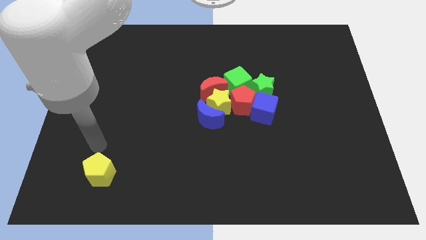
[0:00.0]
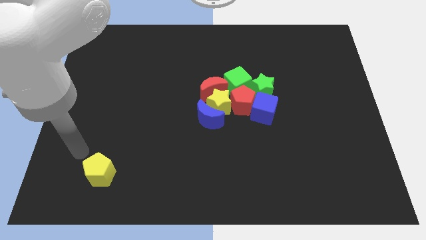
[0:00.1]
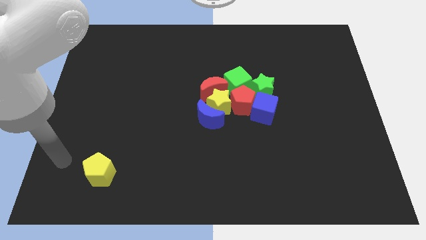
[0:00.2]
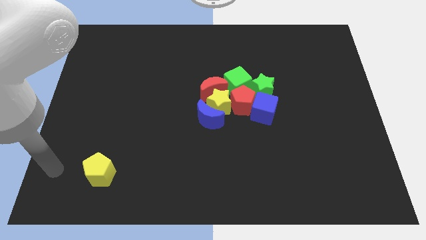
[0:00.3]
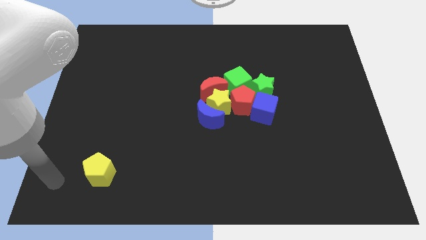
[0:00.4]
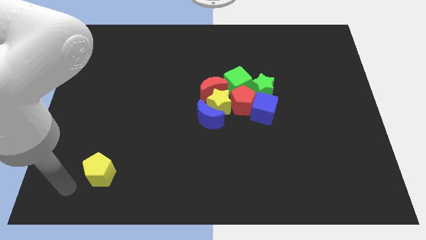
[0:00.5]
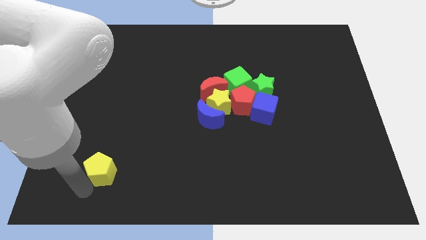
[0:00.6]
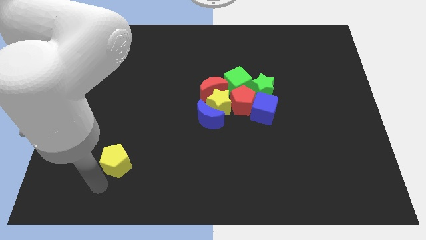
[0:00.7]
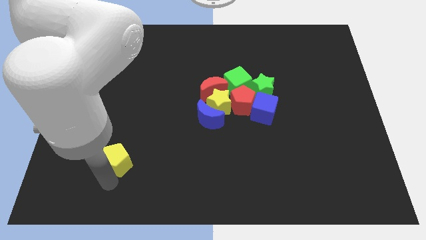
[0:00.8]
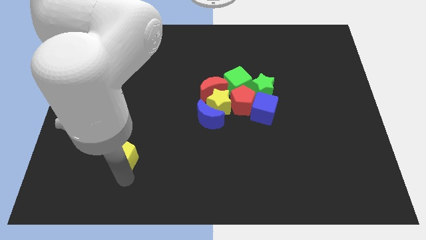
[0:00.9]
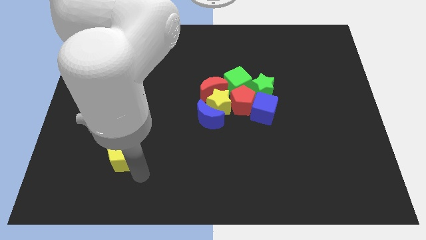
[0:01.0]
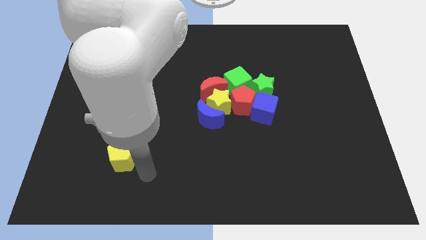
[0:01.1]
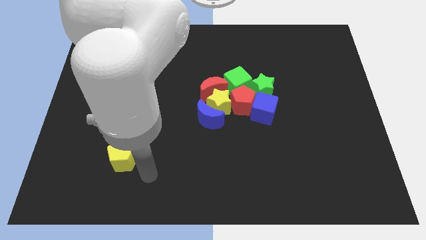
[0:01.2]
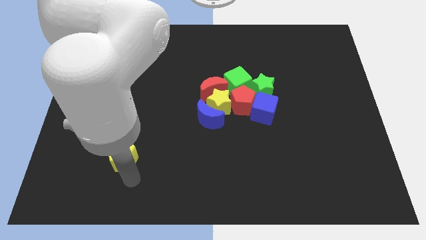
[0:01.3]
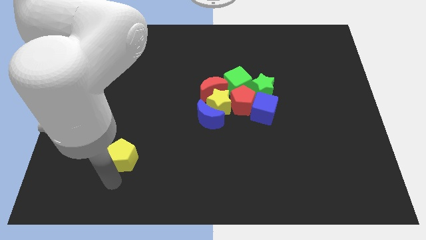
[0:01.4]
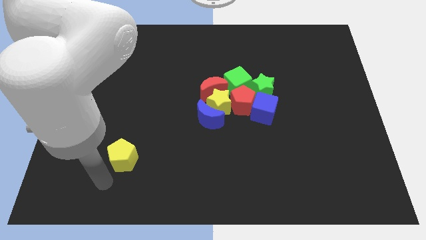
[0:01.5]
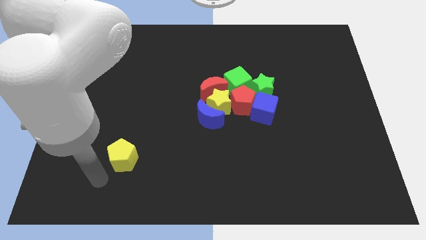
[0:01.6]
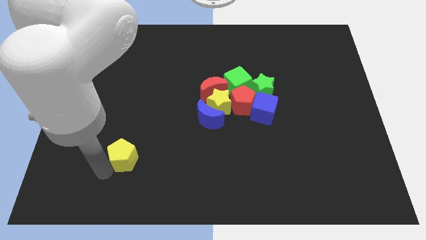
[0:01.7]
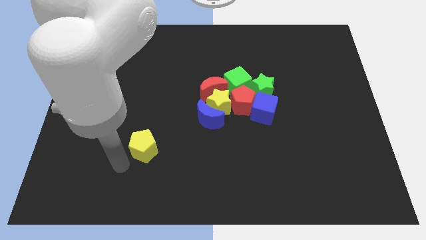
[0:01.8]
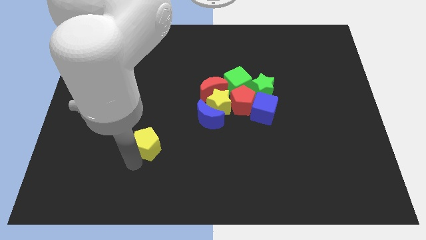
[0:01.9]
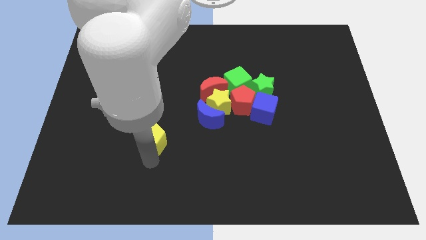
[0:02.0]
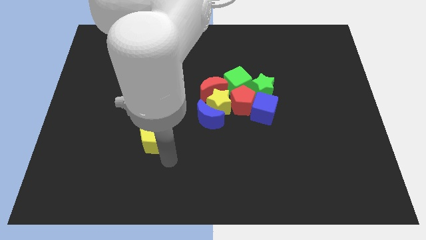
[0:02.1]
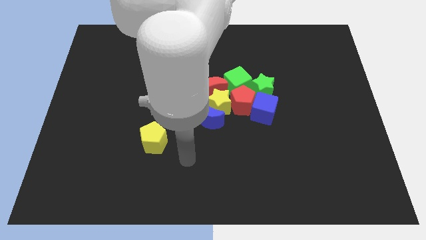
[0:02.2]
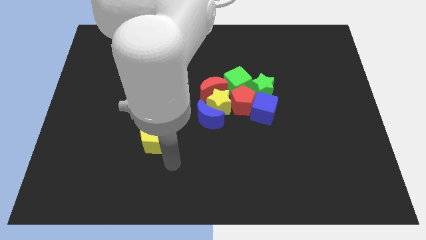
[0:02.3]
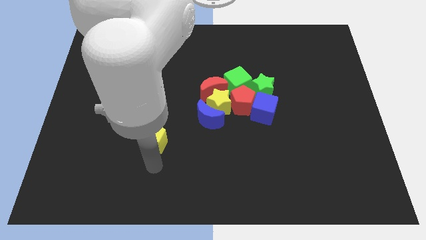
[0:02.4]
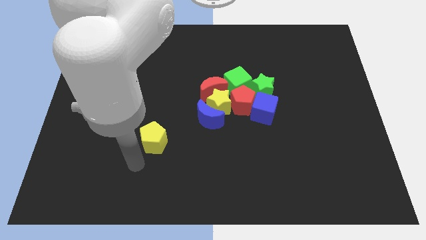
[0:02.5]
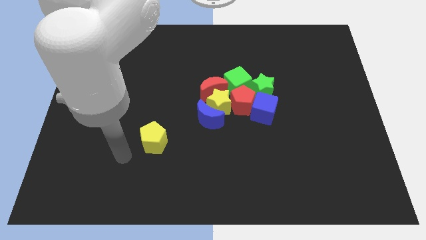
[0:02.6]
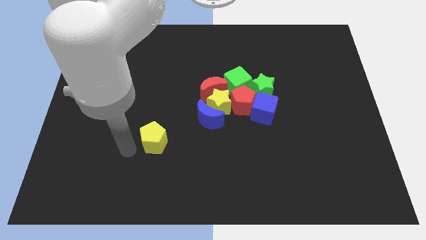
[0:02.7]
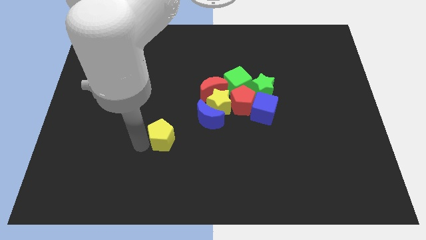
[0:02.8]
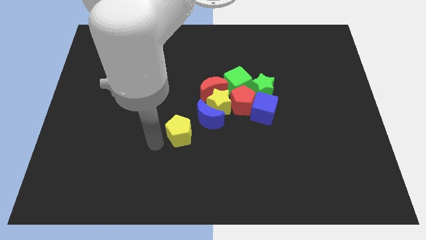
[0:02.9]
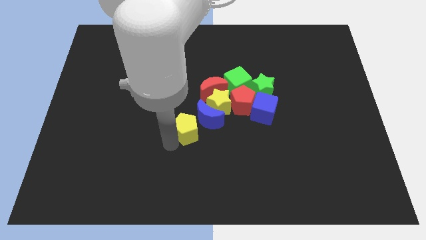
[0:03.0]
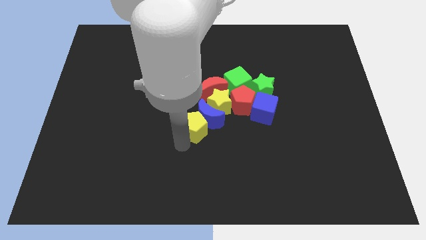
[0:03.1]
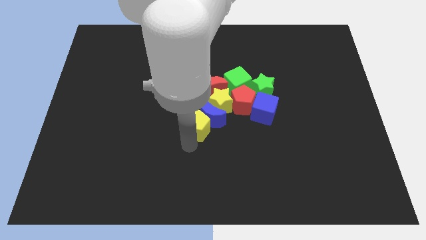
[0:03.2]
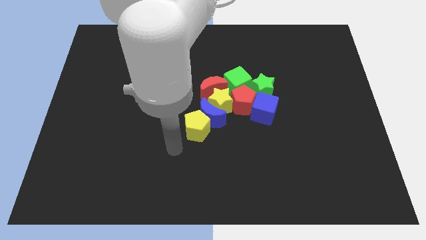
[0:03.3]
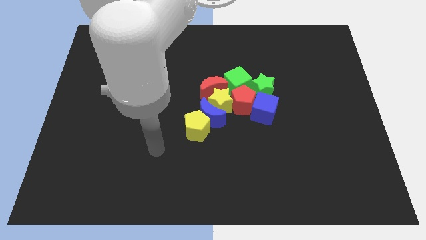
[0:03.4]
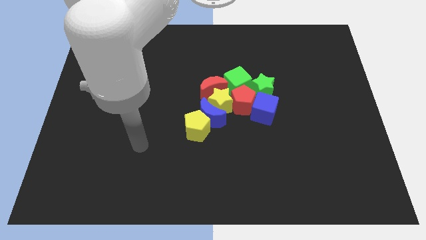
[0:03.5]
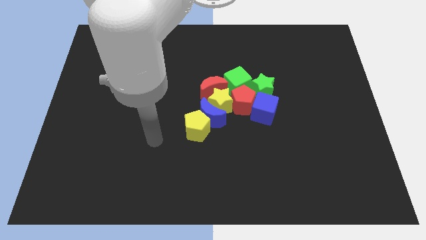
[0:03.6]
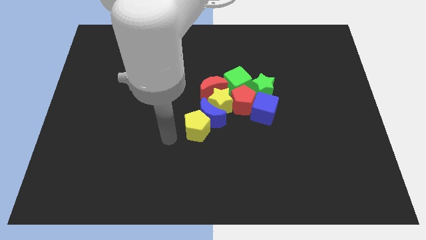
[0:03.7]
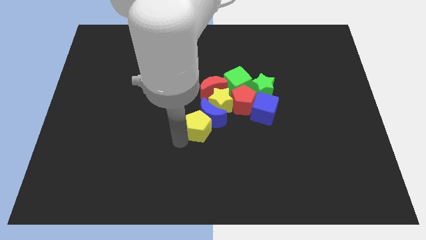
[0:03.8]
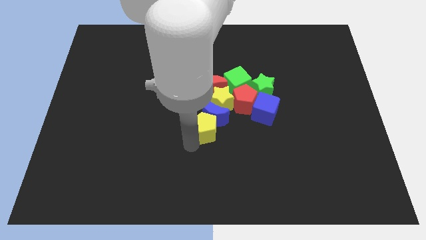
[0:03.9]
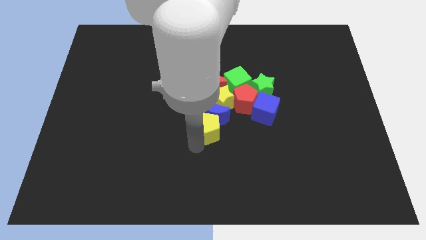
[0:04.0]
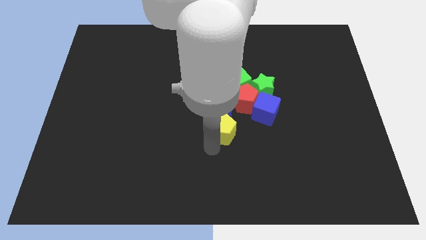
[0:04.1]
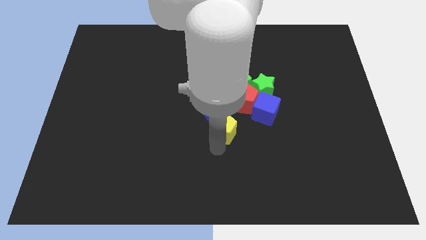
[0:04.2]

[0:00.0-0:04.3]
drag the yellow pentagon into the bottom side of the blue crescent

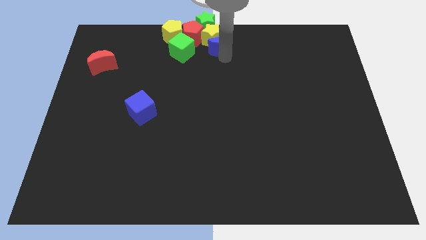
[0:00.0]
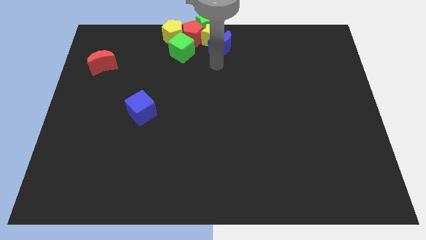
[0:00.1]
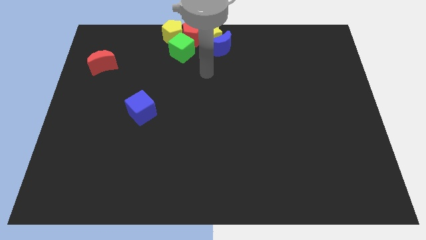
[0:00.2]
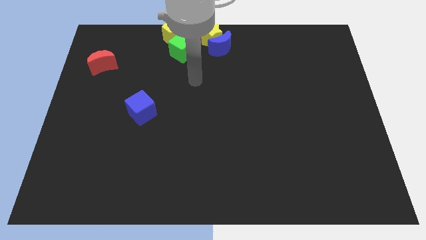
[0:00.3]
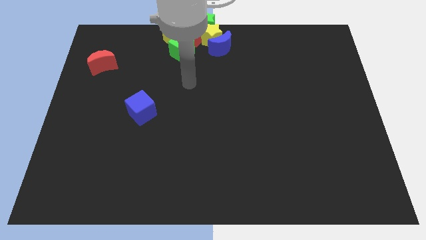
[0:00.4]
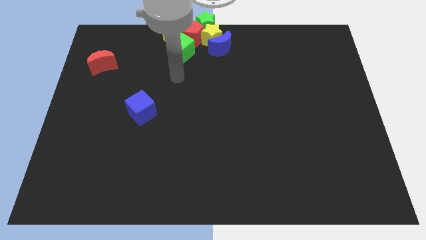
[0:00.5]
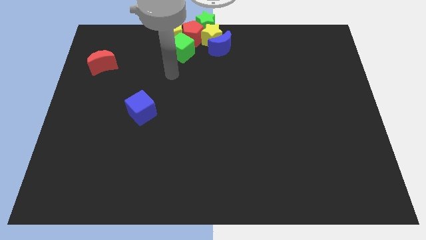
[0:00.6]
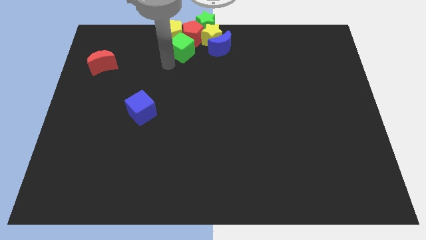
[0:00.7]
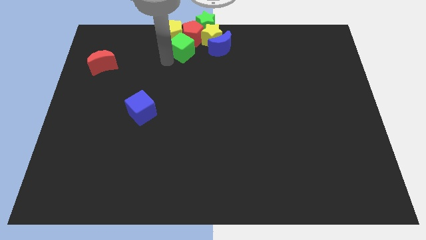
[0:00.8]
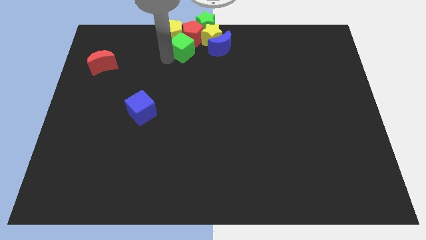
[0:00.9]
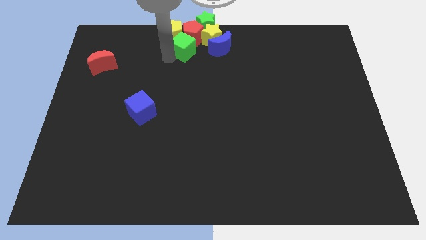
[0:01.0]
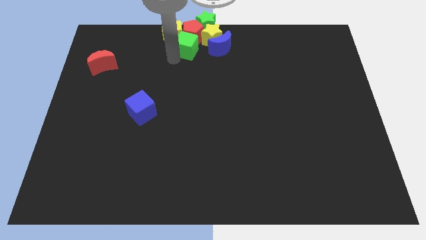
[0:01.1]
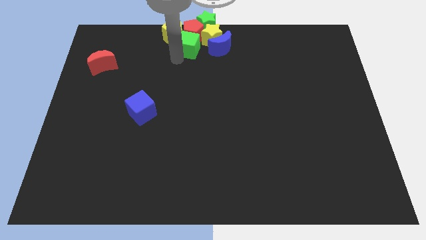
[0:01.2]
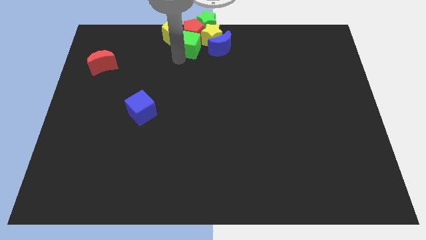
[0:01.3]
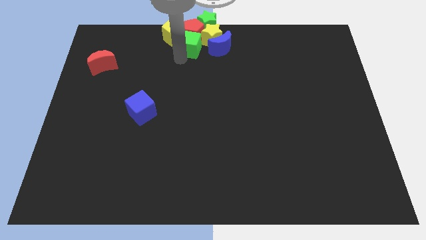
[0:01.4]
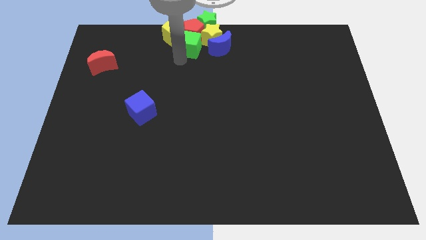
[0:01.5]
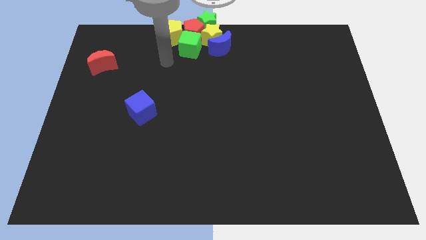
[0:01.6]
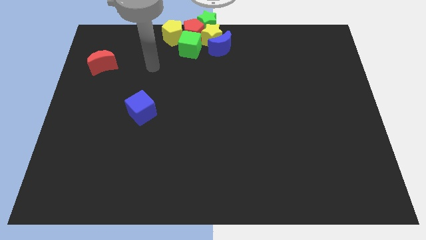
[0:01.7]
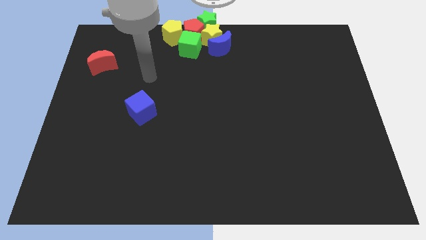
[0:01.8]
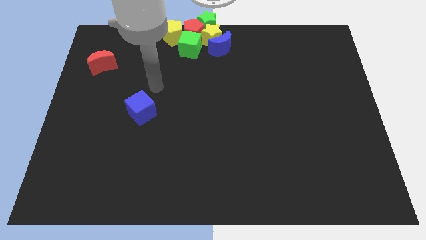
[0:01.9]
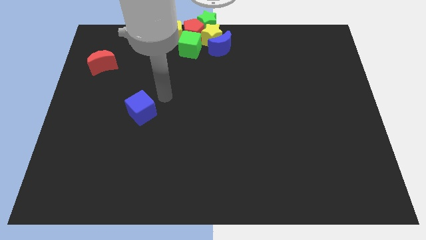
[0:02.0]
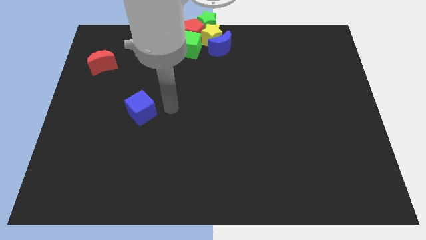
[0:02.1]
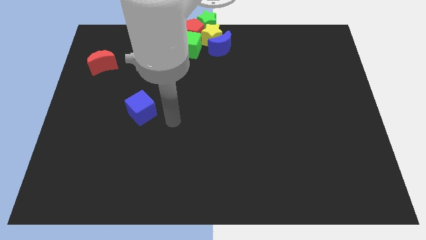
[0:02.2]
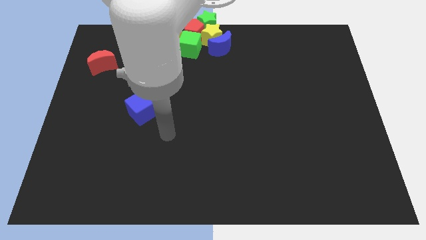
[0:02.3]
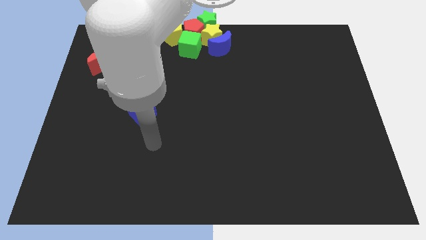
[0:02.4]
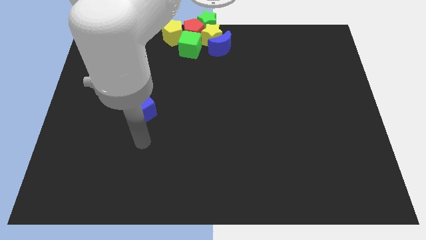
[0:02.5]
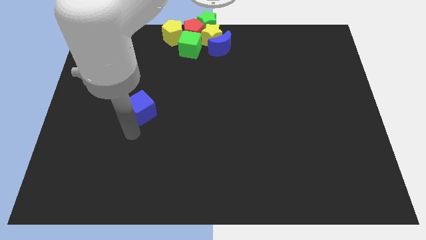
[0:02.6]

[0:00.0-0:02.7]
place your arm below blue cube

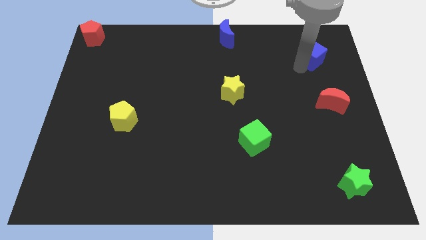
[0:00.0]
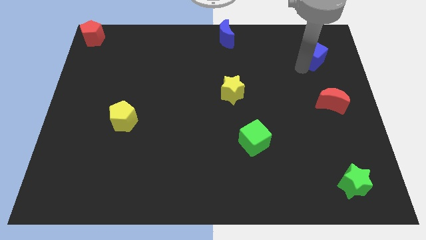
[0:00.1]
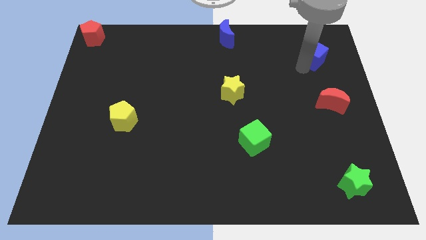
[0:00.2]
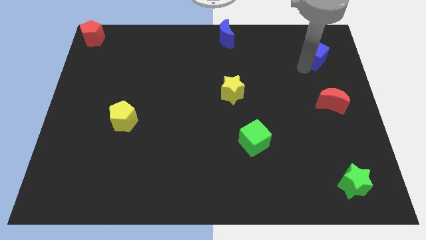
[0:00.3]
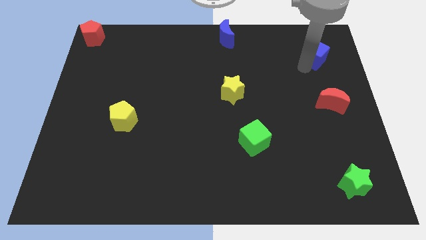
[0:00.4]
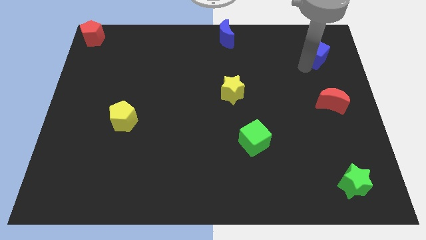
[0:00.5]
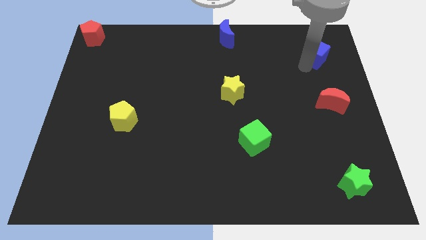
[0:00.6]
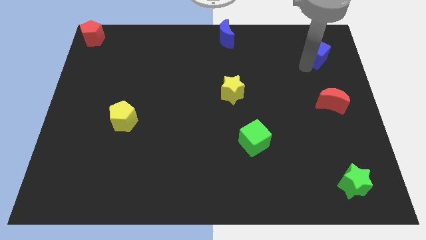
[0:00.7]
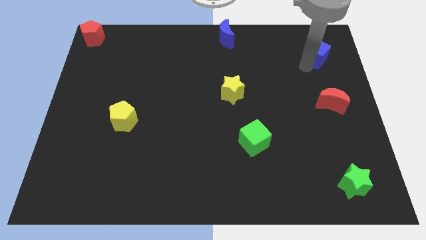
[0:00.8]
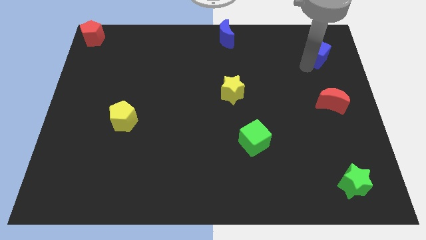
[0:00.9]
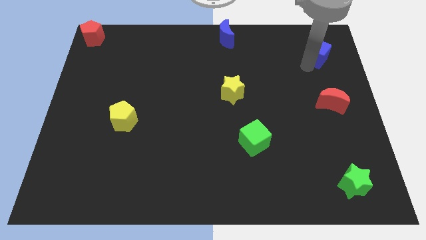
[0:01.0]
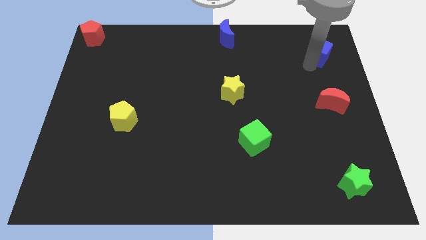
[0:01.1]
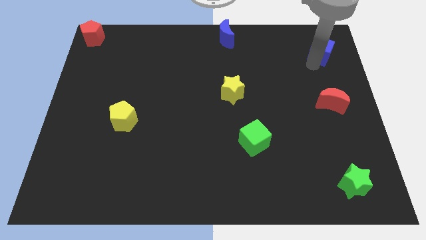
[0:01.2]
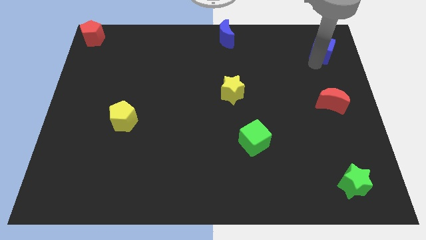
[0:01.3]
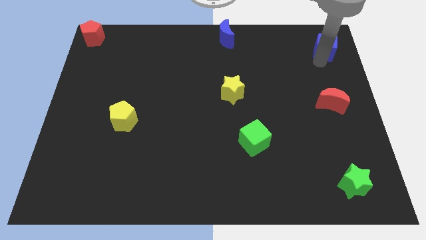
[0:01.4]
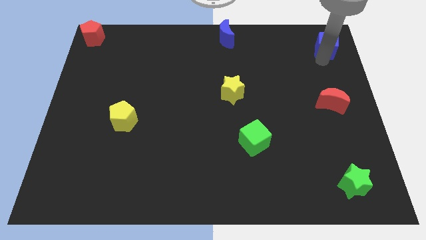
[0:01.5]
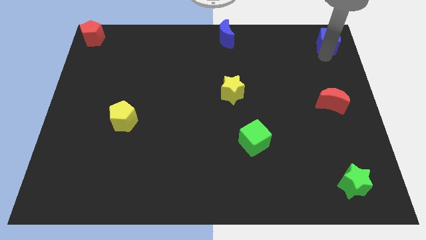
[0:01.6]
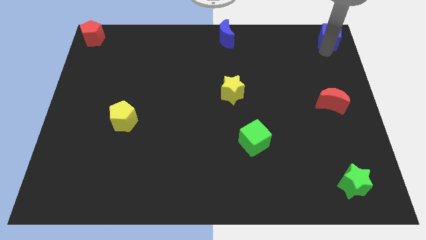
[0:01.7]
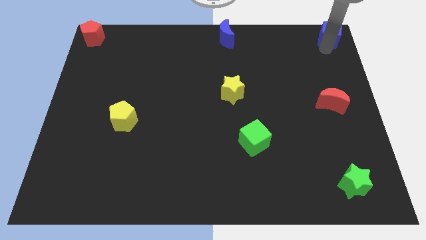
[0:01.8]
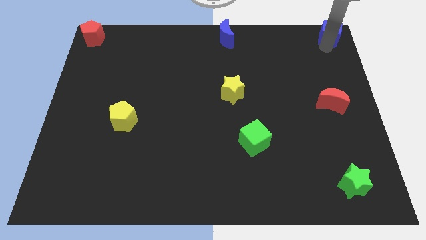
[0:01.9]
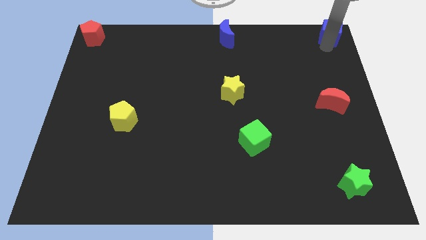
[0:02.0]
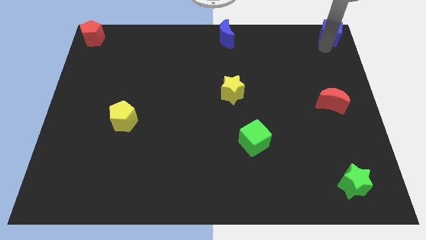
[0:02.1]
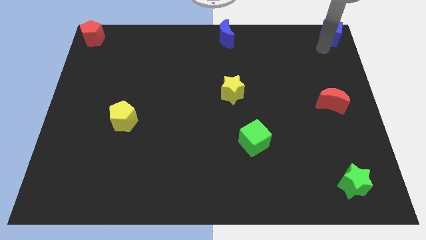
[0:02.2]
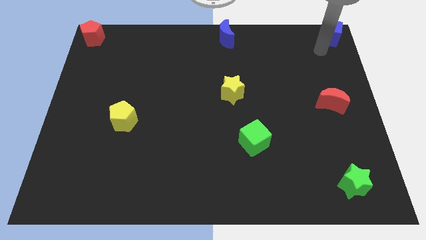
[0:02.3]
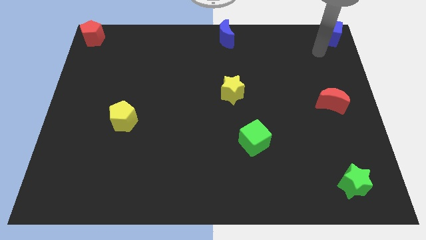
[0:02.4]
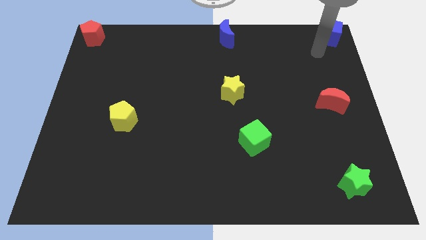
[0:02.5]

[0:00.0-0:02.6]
push the blue cube to the top right
